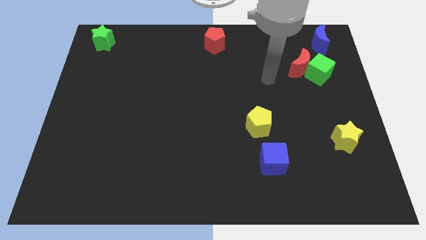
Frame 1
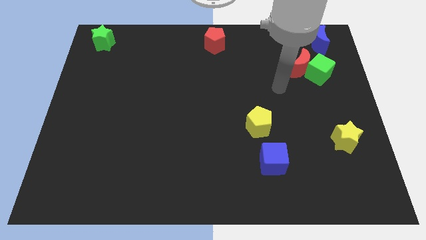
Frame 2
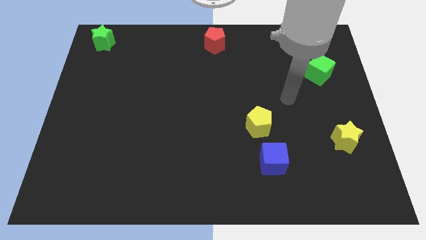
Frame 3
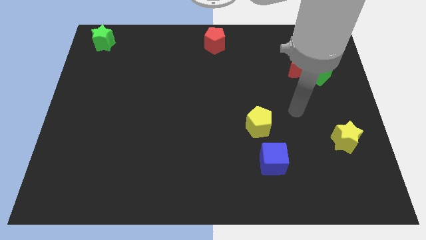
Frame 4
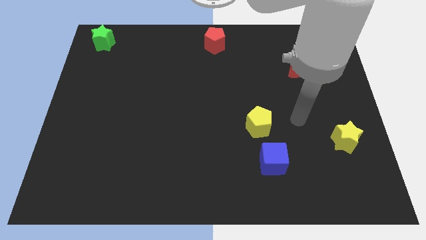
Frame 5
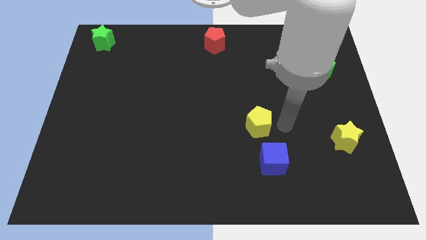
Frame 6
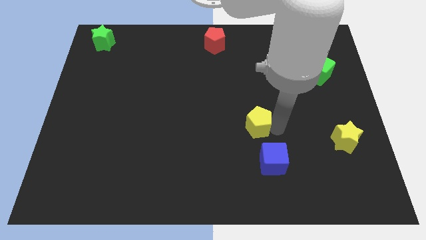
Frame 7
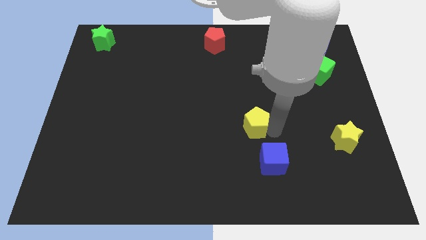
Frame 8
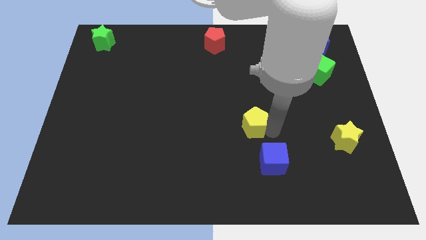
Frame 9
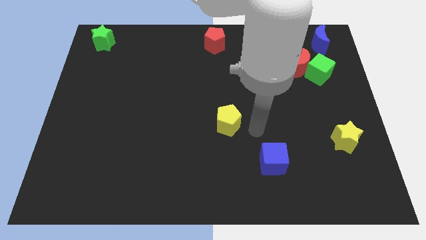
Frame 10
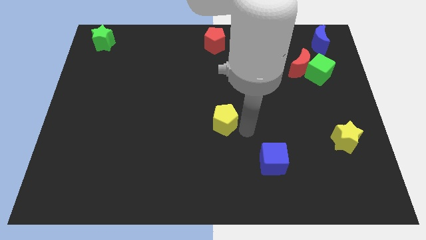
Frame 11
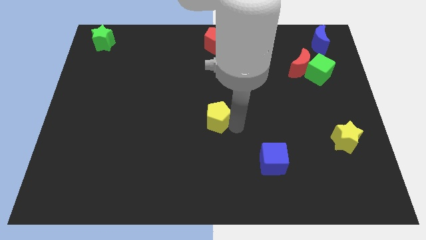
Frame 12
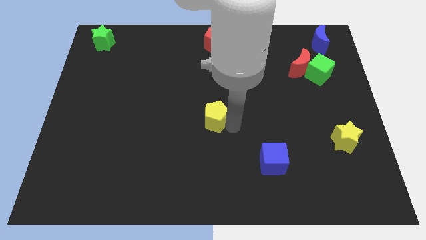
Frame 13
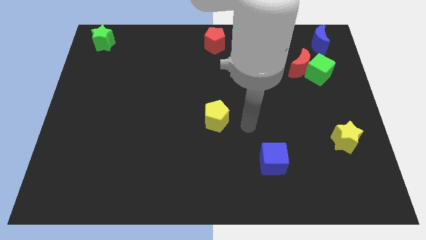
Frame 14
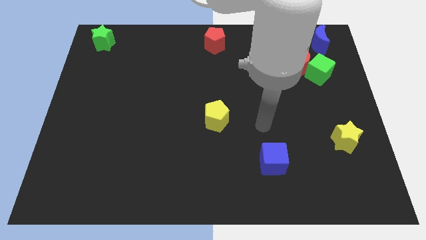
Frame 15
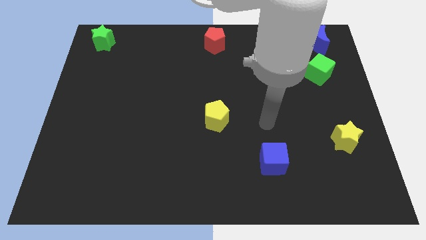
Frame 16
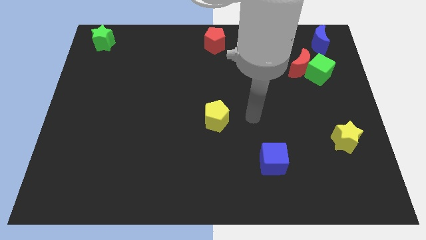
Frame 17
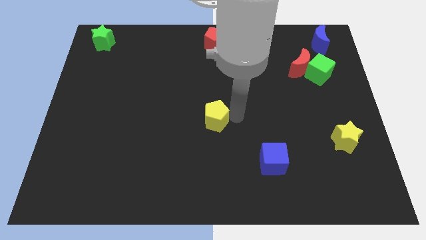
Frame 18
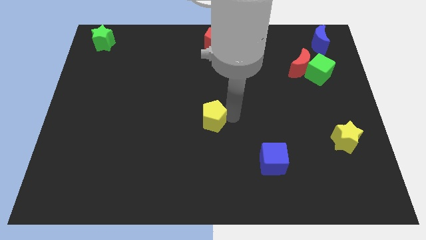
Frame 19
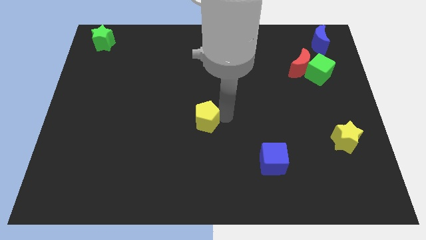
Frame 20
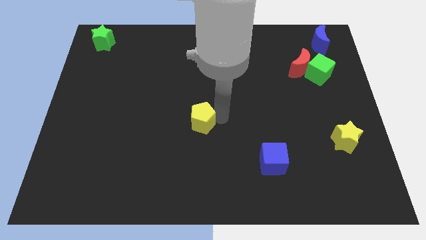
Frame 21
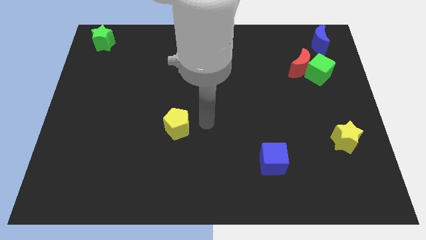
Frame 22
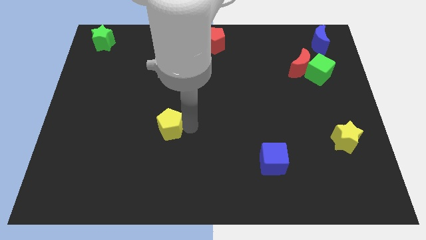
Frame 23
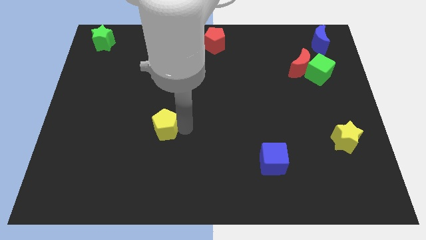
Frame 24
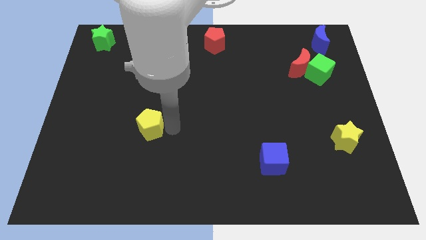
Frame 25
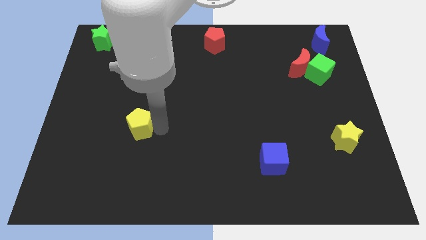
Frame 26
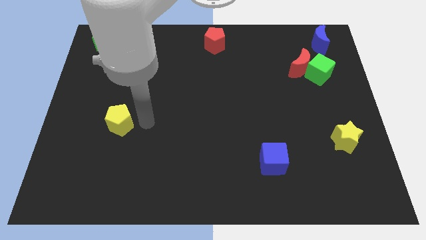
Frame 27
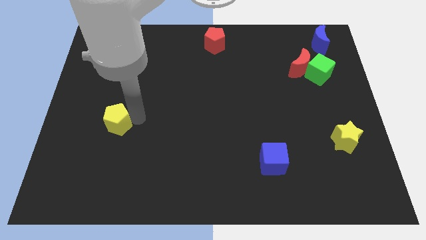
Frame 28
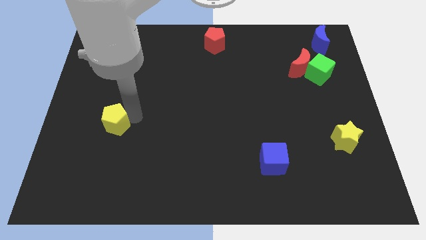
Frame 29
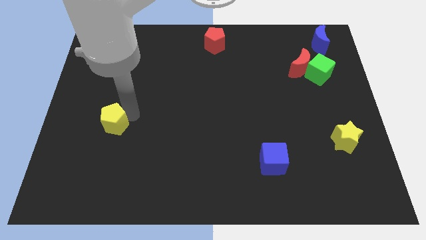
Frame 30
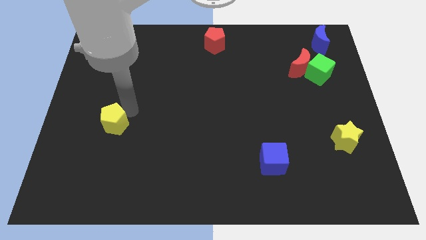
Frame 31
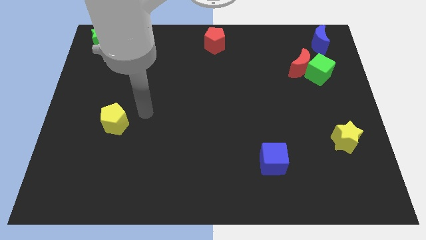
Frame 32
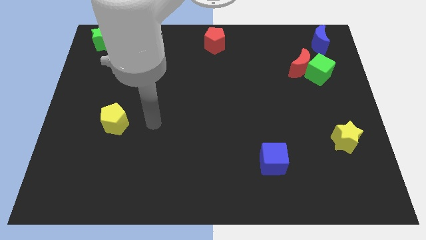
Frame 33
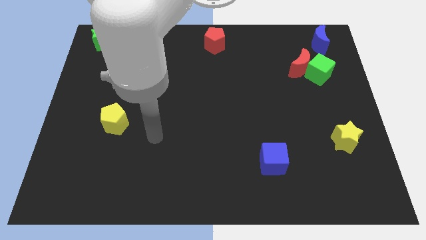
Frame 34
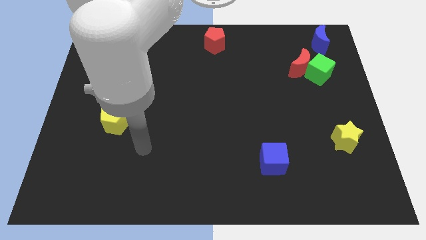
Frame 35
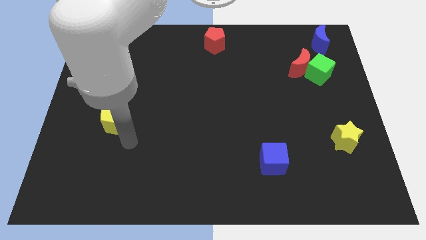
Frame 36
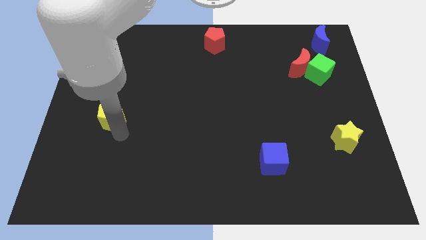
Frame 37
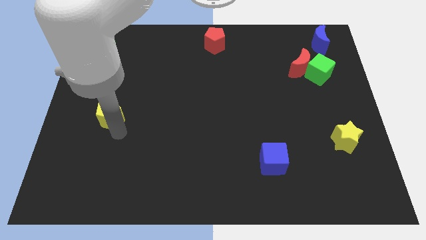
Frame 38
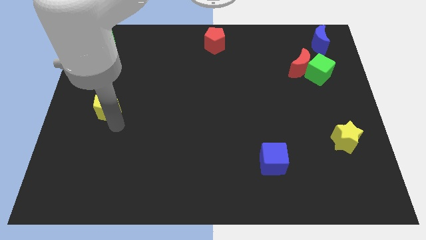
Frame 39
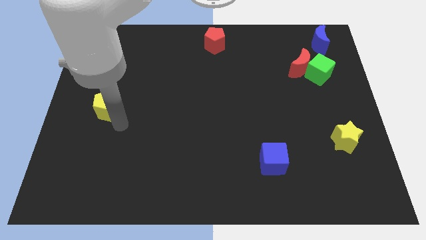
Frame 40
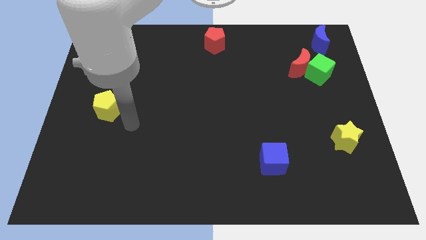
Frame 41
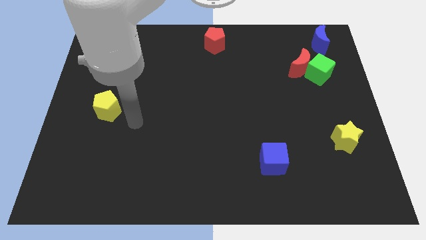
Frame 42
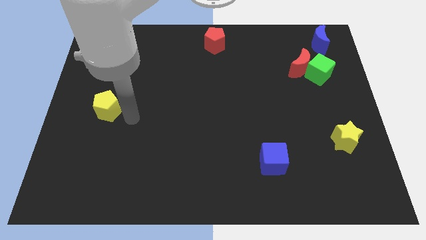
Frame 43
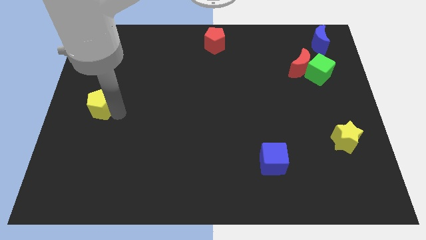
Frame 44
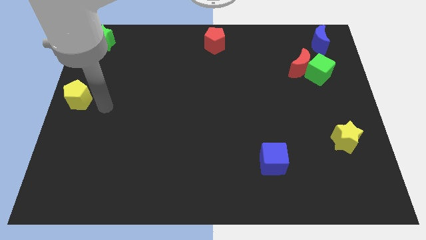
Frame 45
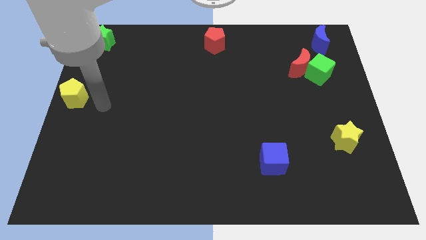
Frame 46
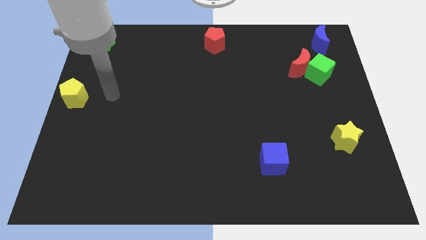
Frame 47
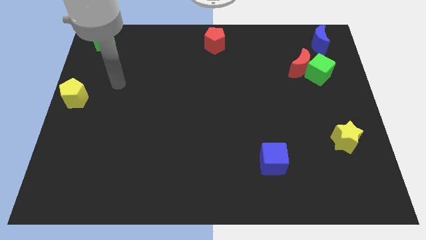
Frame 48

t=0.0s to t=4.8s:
move the yellow pentagon to the center left of the board

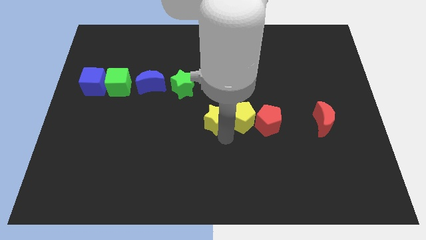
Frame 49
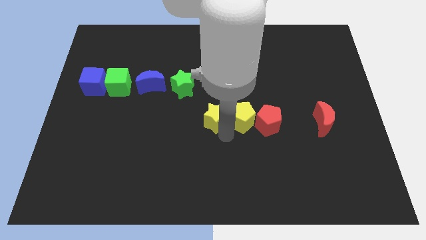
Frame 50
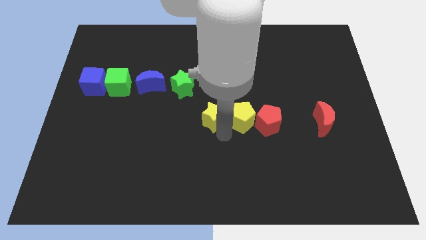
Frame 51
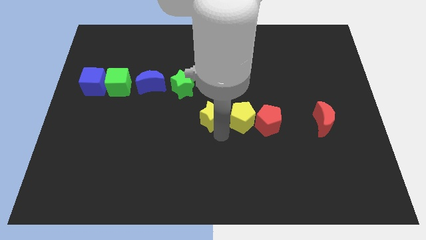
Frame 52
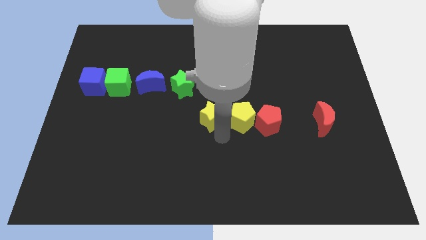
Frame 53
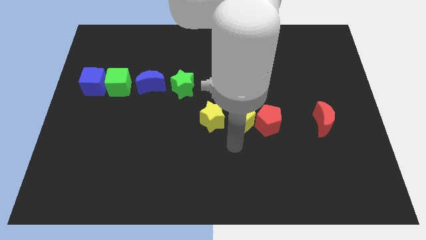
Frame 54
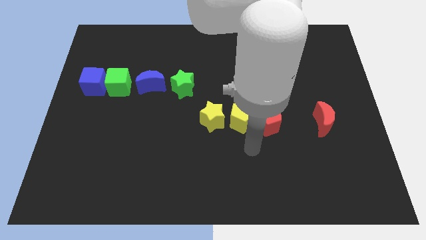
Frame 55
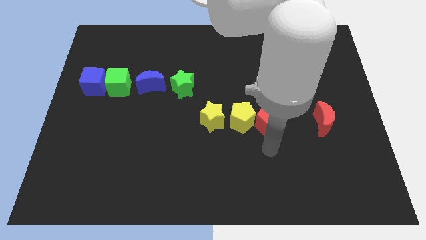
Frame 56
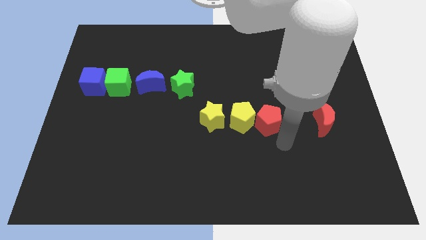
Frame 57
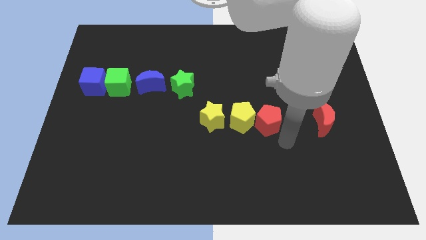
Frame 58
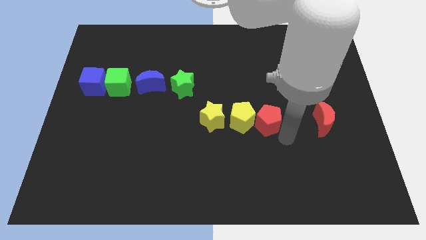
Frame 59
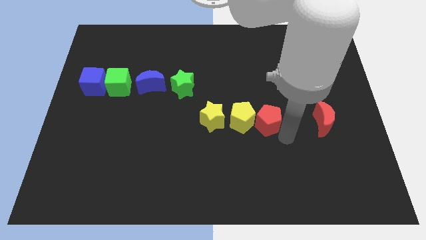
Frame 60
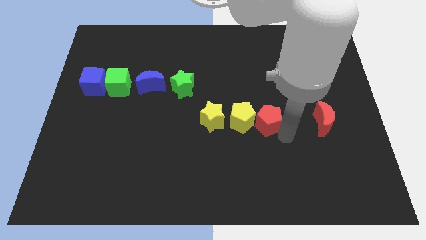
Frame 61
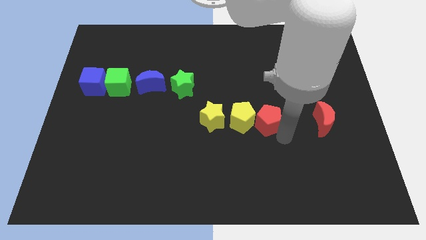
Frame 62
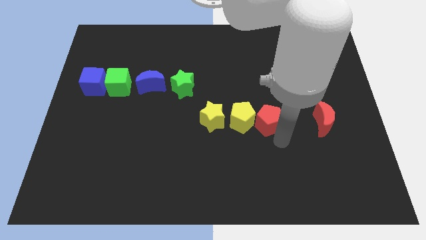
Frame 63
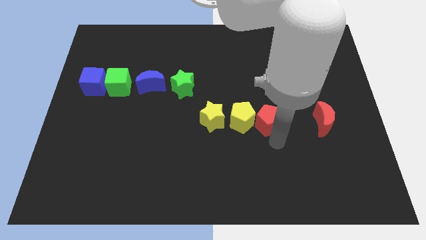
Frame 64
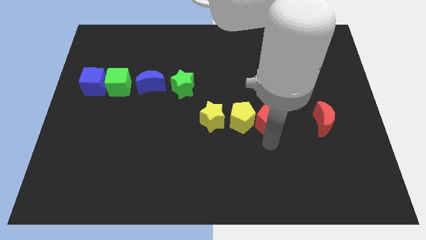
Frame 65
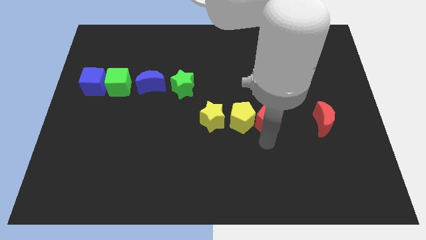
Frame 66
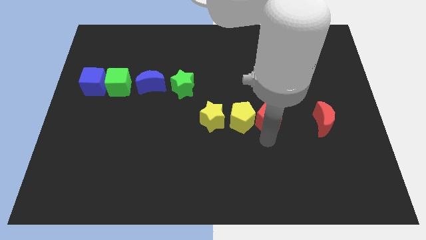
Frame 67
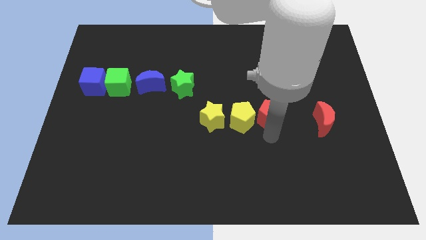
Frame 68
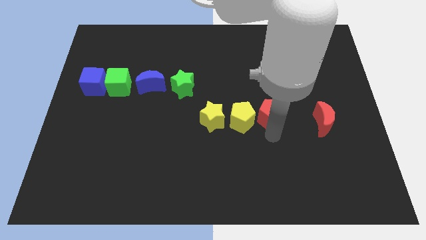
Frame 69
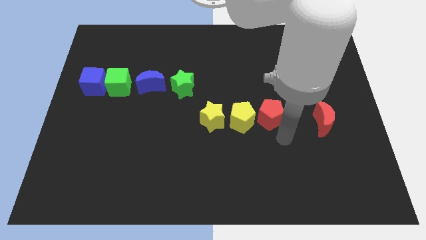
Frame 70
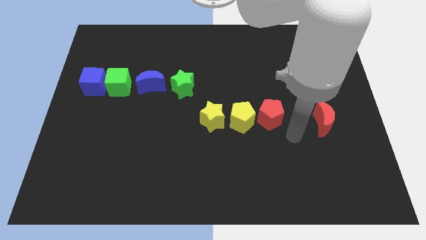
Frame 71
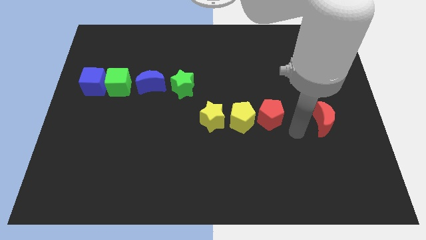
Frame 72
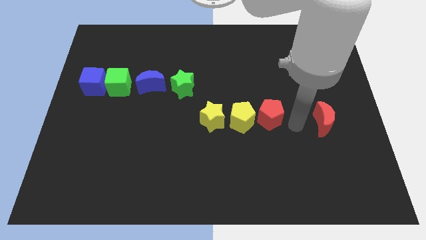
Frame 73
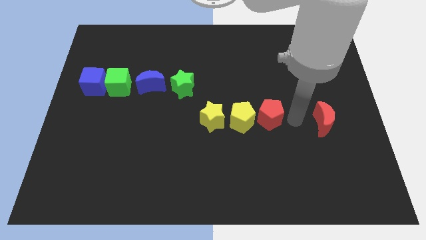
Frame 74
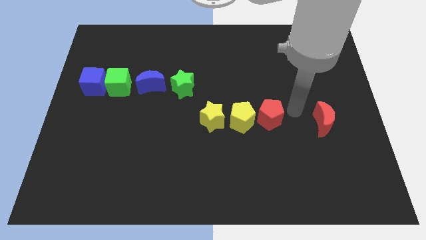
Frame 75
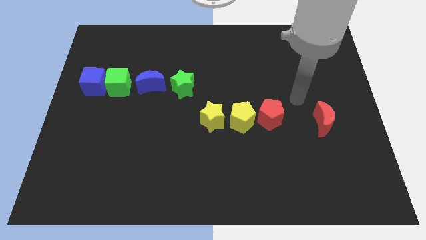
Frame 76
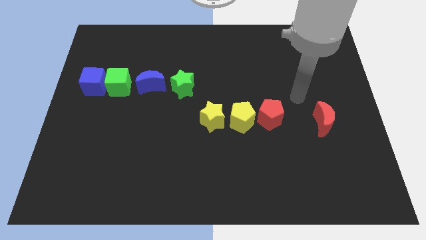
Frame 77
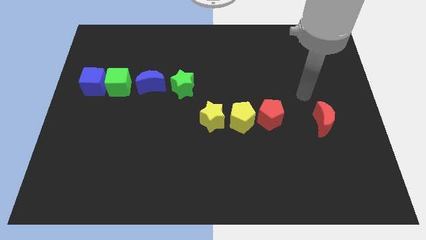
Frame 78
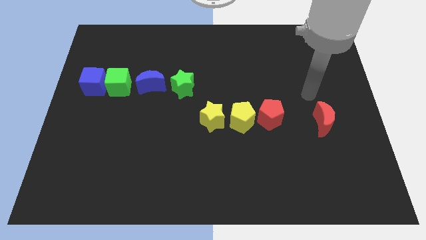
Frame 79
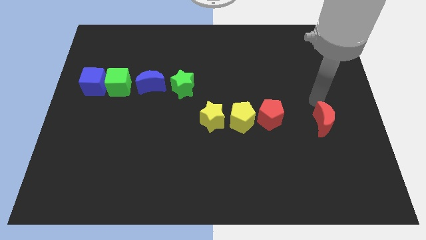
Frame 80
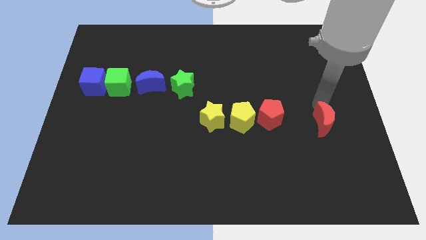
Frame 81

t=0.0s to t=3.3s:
adjust the red pentagon horizontally along with the yellow pentagon

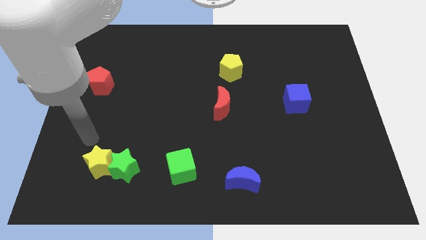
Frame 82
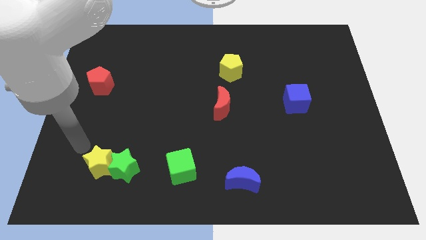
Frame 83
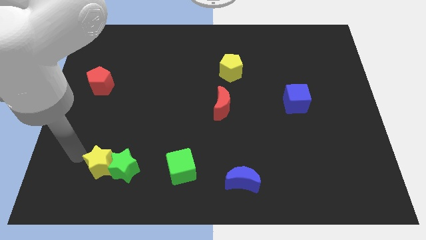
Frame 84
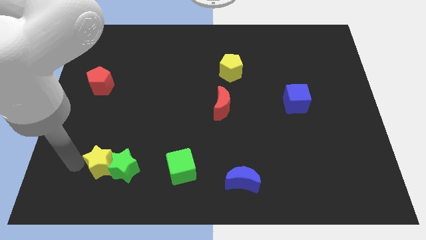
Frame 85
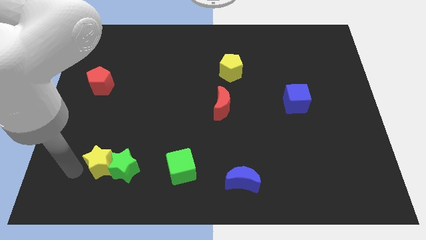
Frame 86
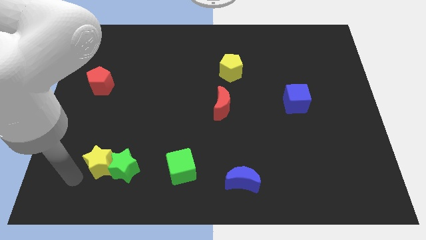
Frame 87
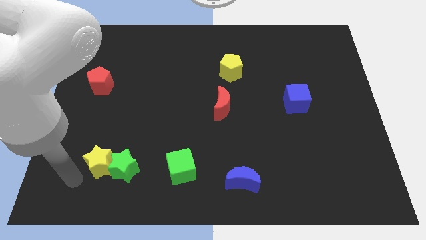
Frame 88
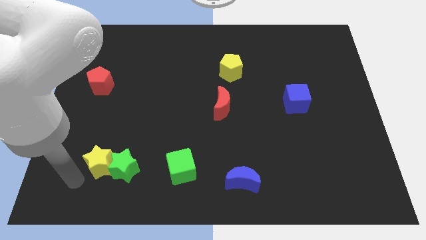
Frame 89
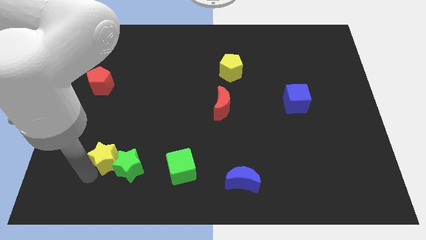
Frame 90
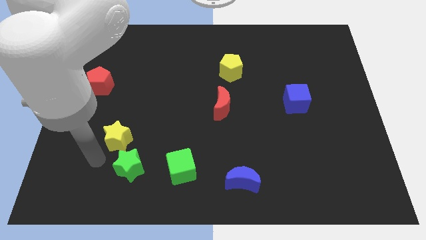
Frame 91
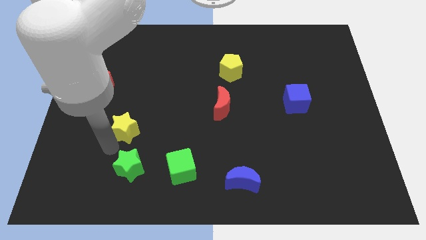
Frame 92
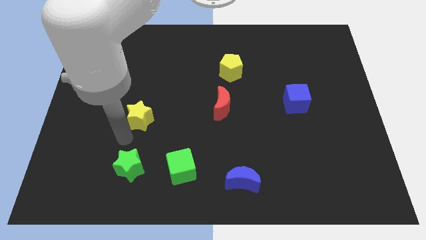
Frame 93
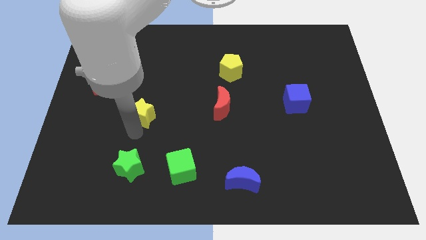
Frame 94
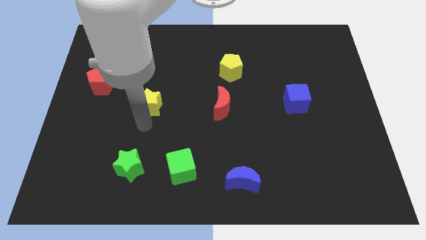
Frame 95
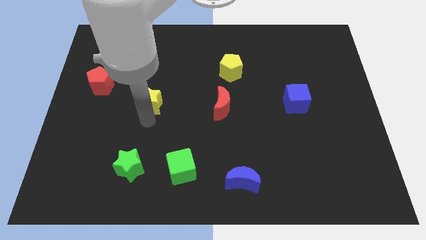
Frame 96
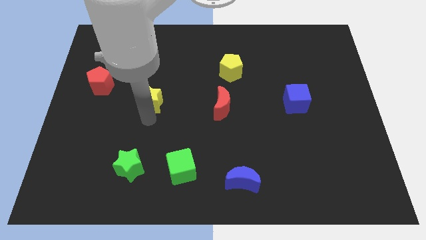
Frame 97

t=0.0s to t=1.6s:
move yellow star left beside the red moon
